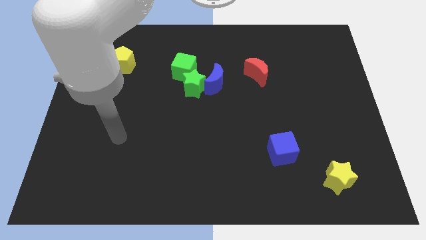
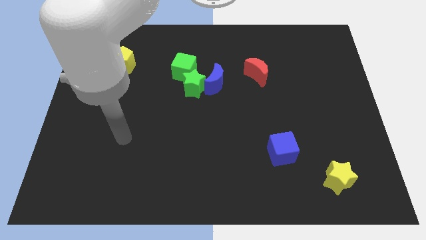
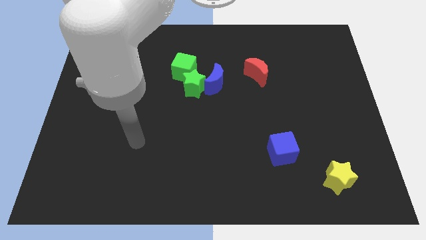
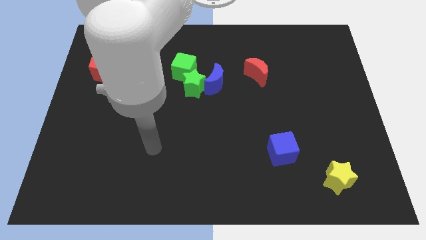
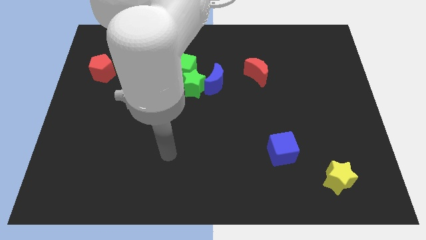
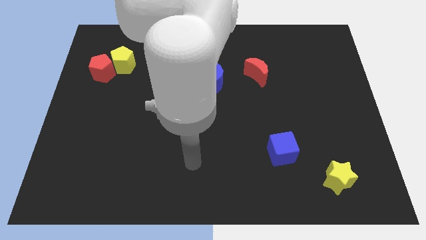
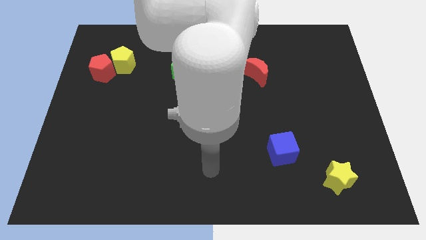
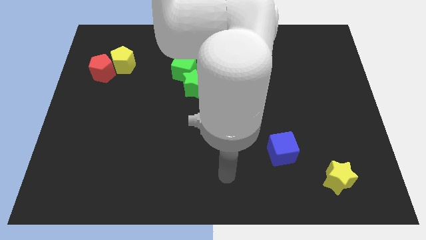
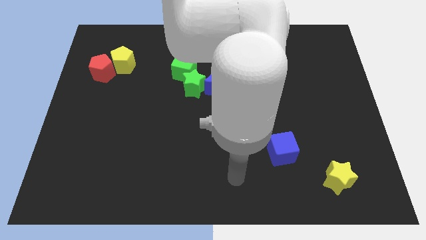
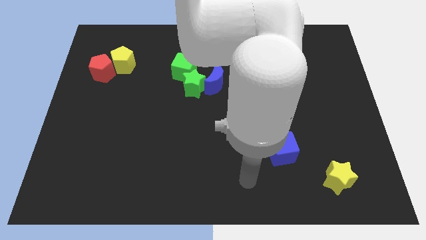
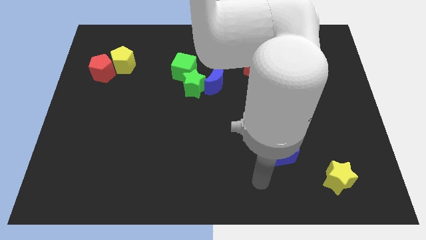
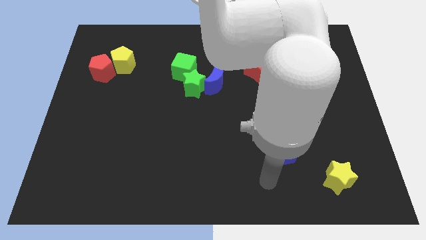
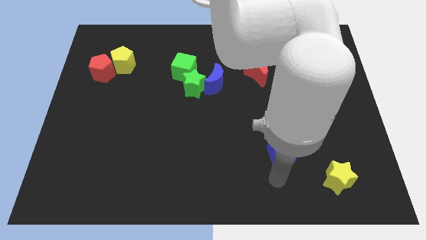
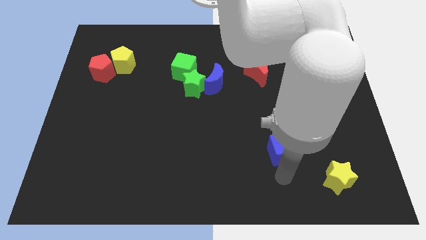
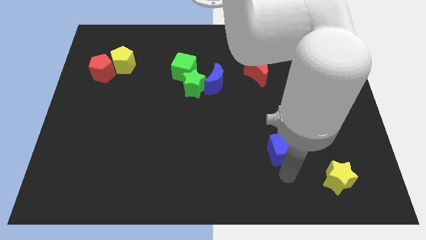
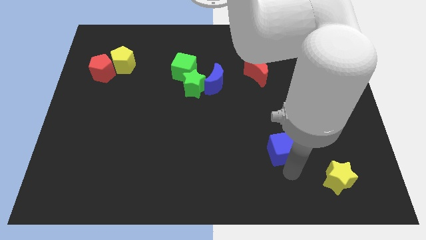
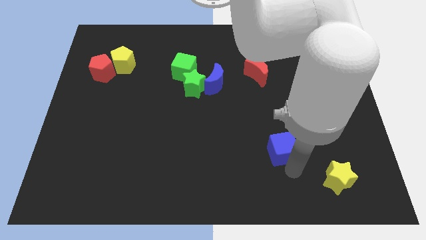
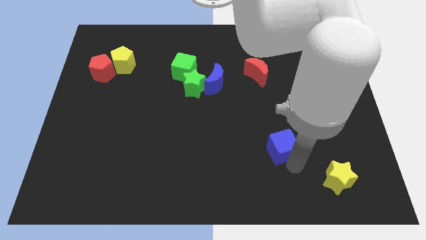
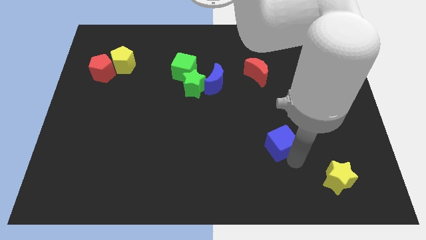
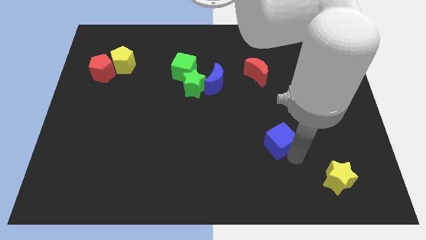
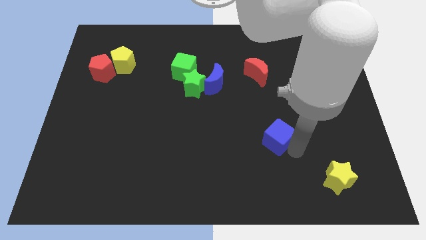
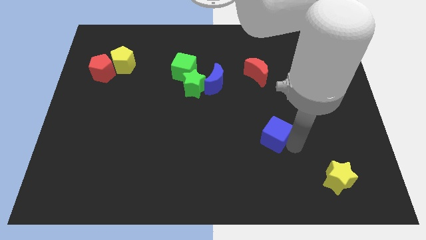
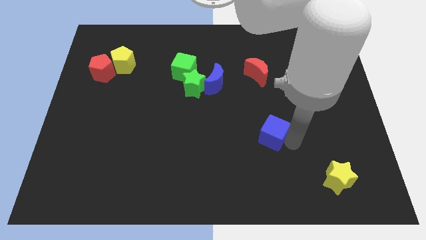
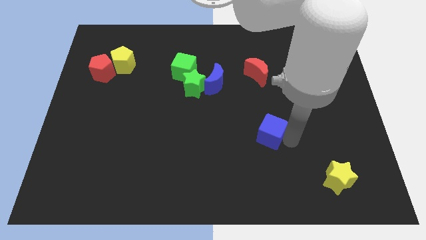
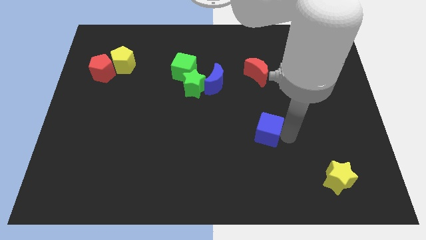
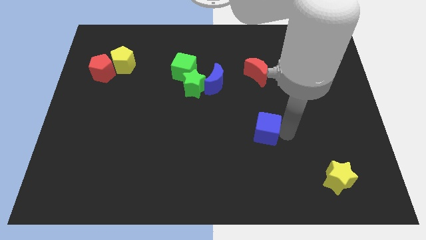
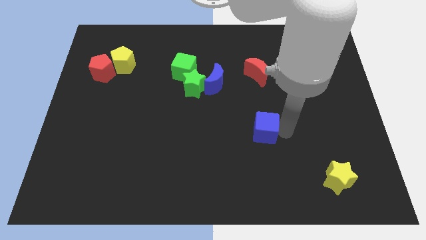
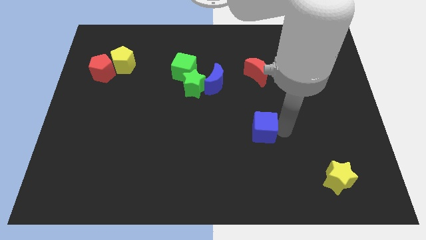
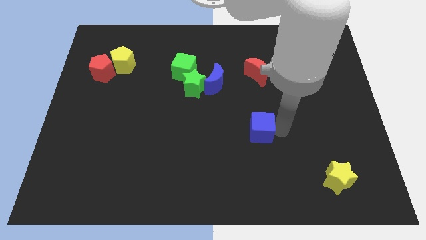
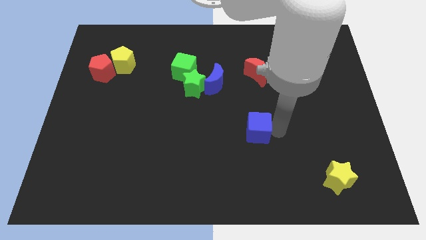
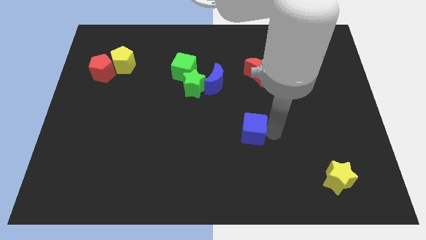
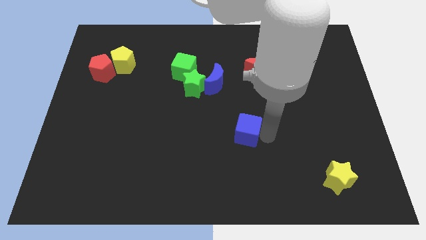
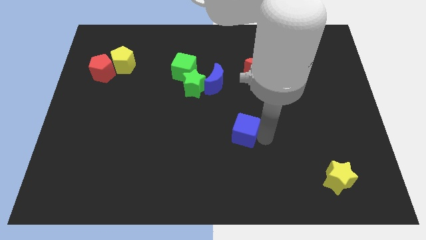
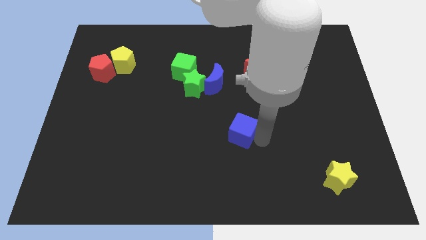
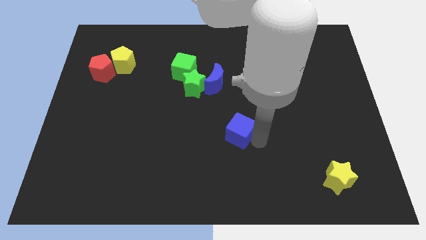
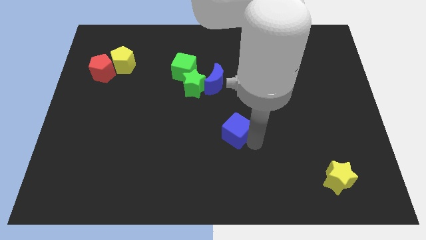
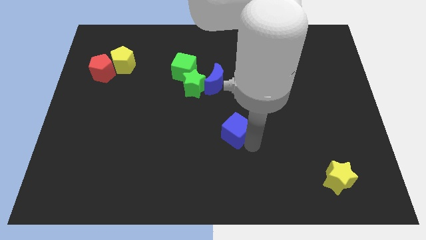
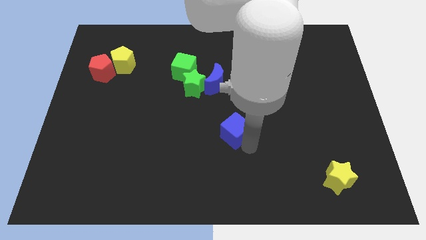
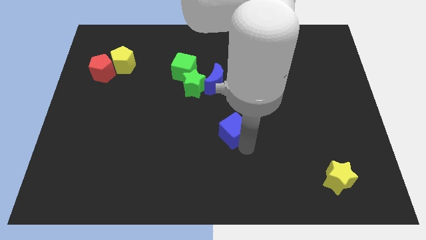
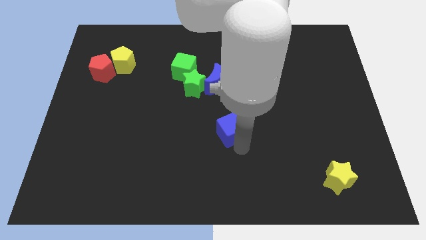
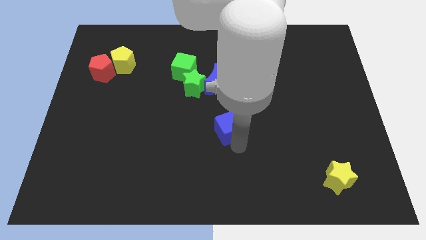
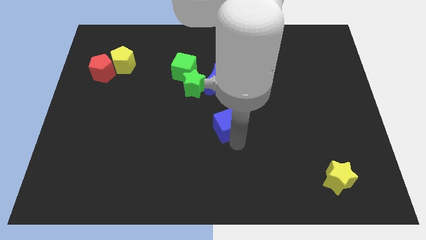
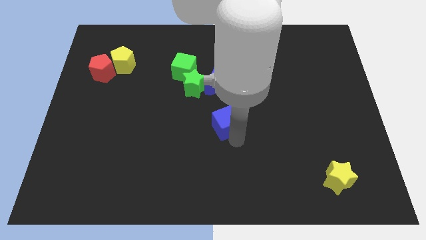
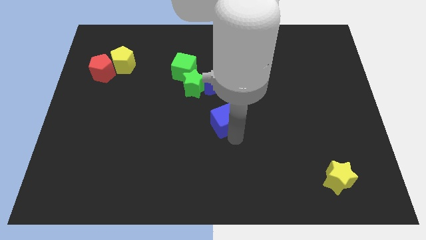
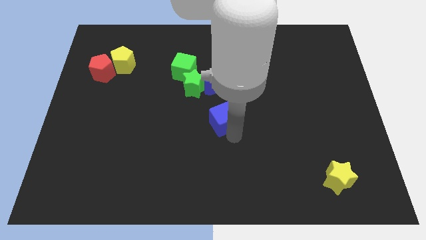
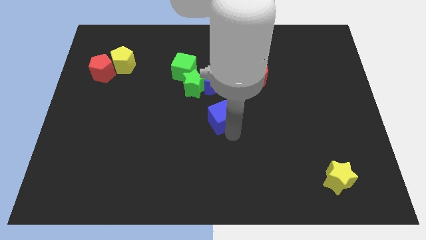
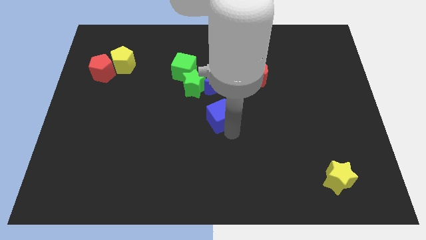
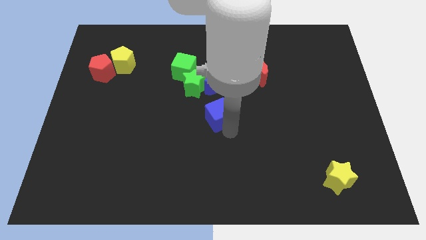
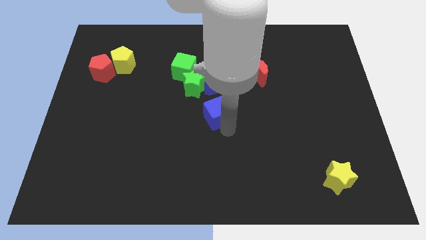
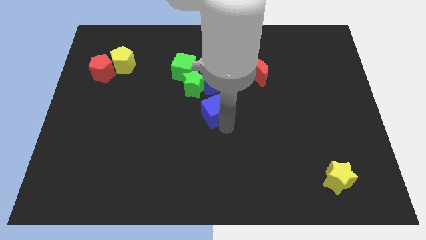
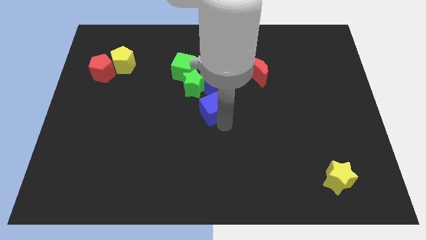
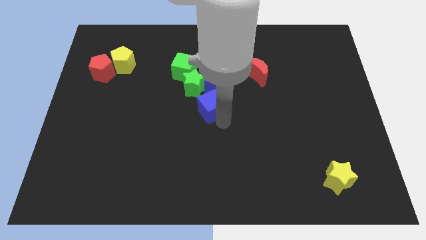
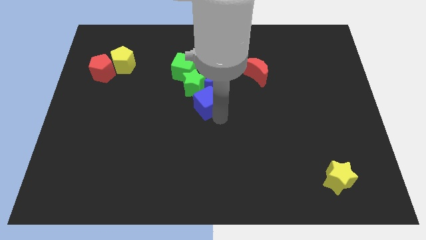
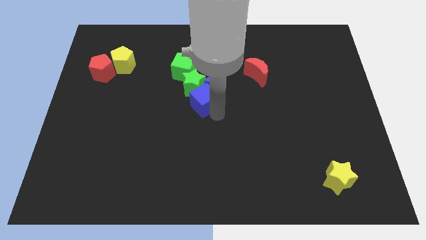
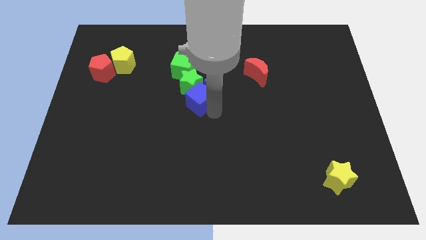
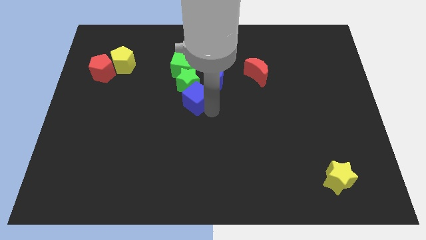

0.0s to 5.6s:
put the blue cube towards the green star

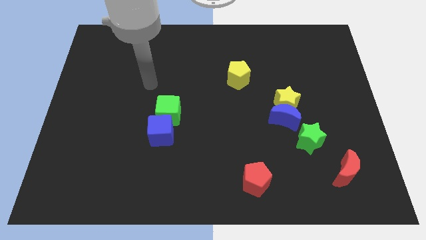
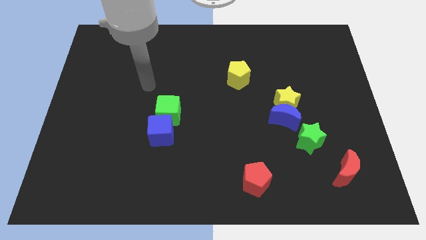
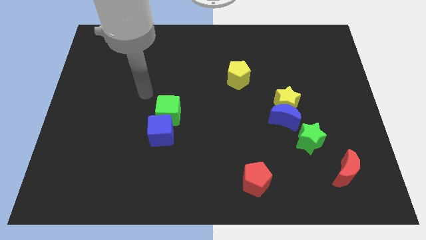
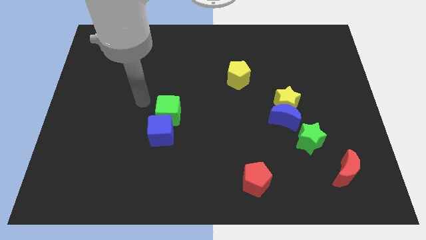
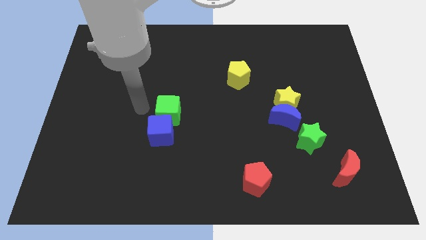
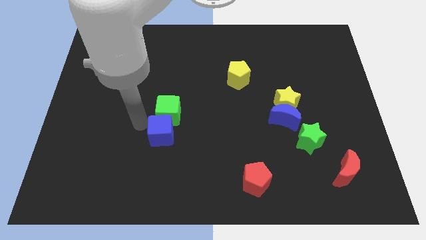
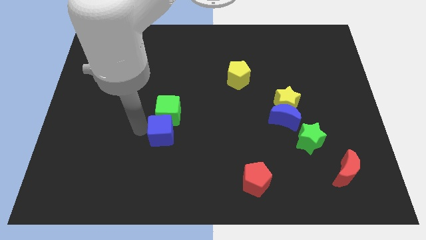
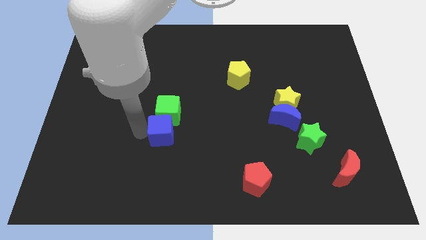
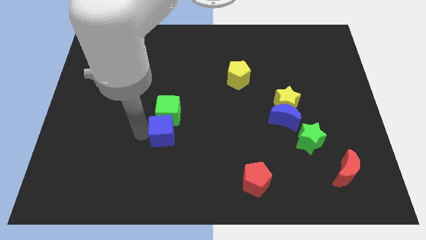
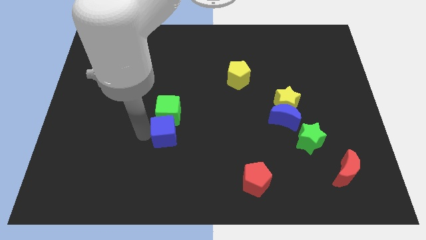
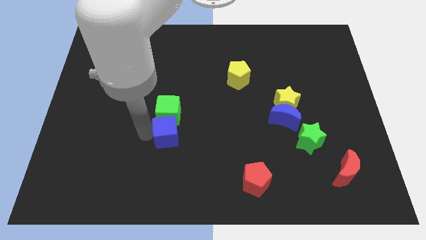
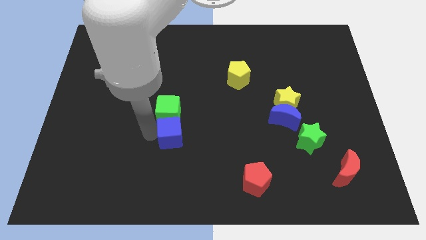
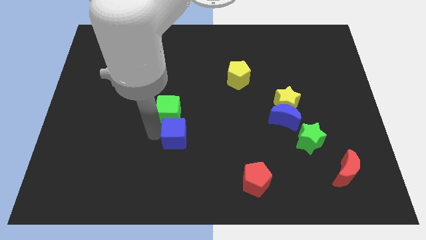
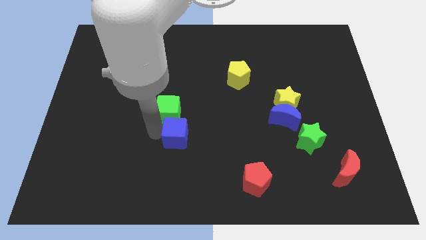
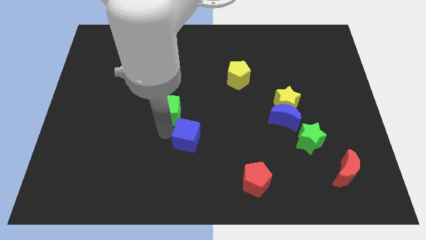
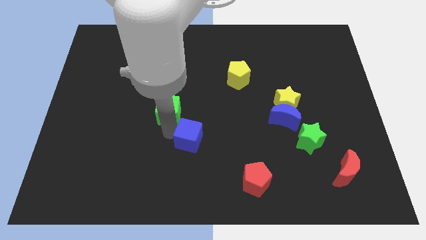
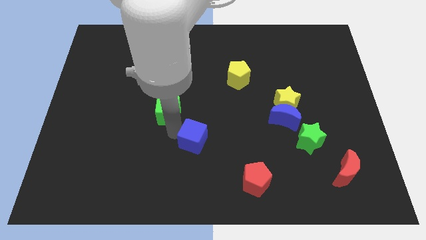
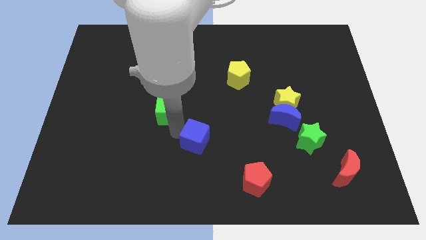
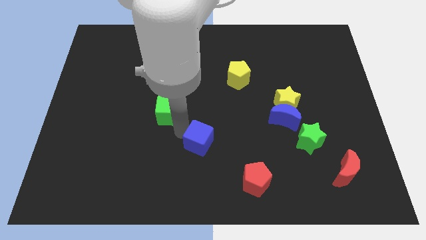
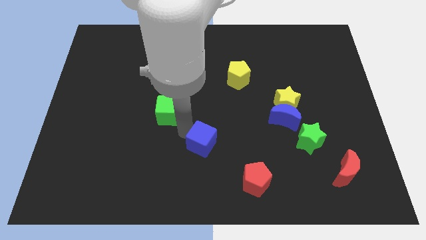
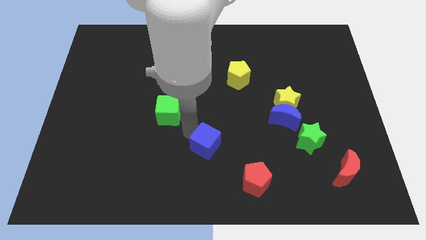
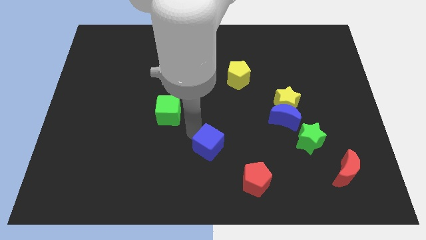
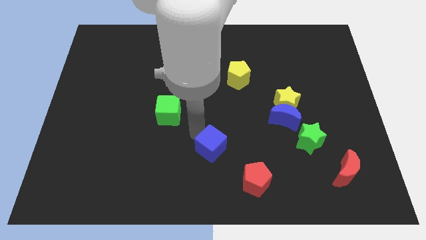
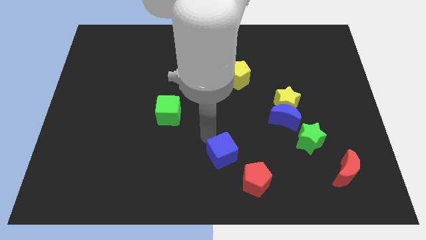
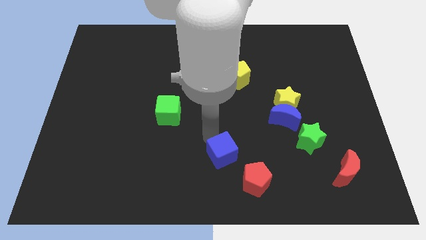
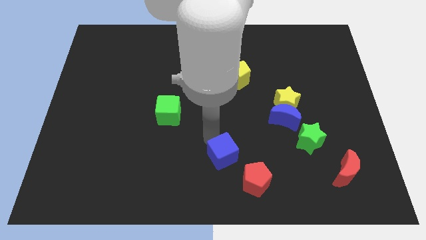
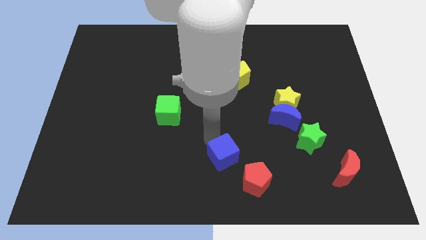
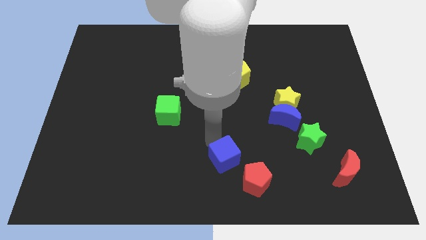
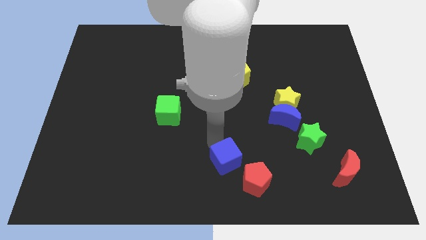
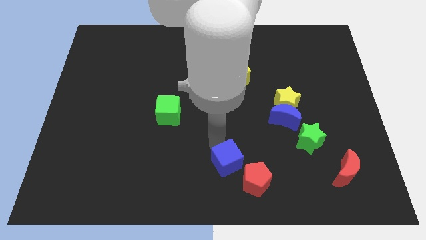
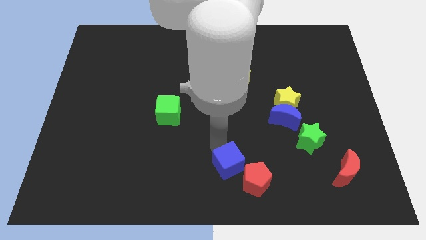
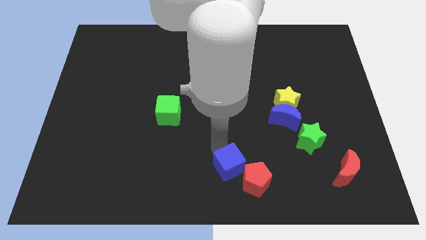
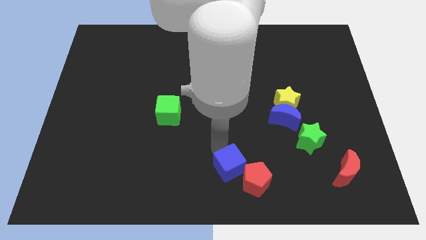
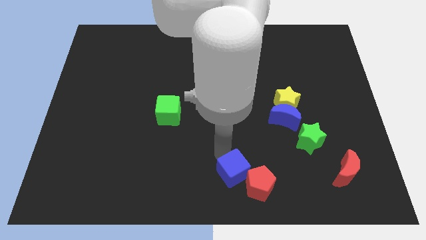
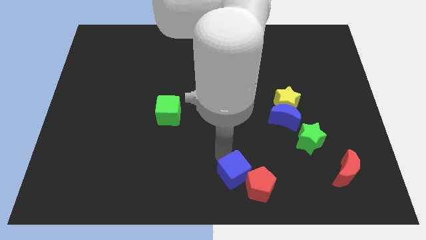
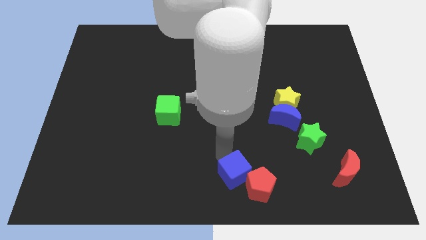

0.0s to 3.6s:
push the blue cube close to the red pentagon
